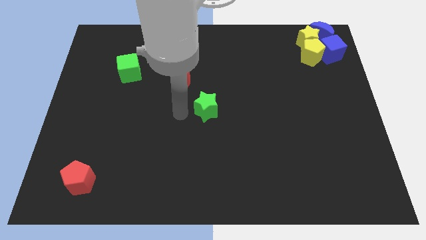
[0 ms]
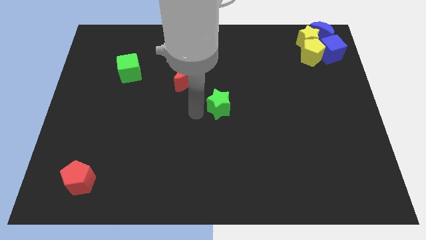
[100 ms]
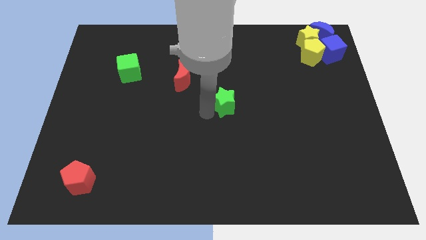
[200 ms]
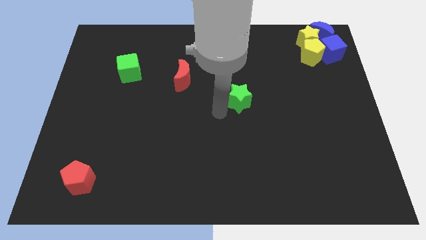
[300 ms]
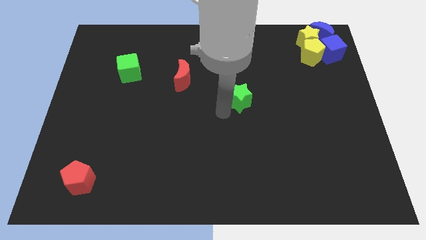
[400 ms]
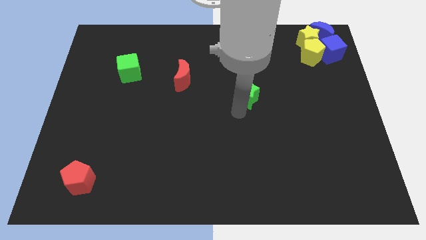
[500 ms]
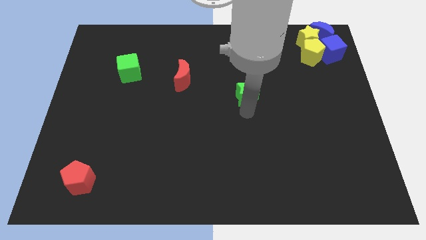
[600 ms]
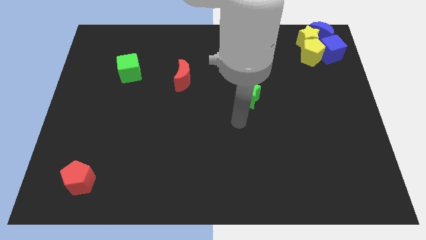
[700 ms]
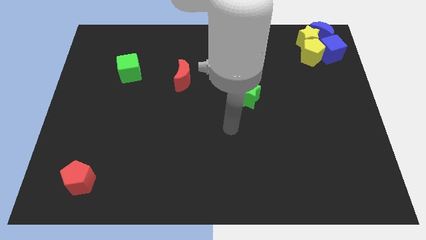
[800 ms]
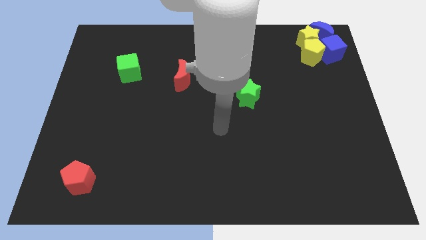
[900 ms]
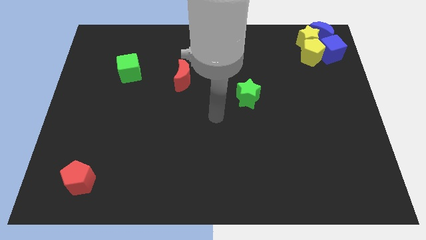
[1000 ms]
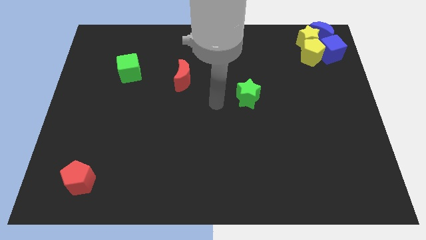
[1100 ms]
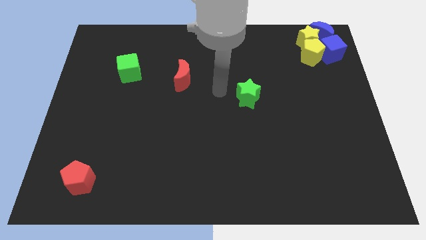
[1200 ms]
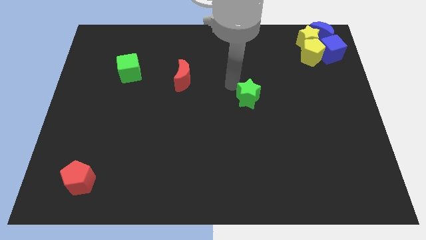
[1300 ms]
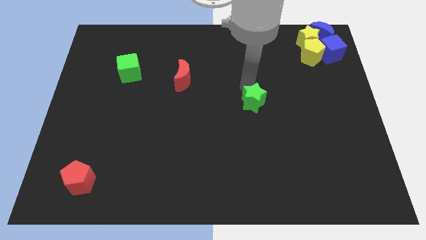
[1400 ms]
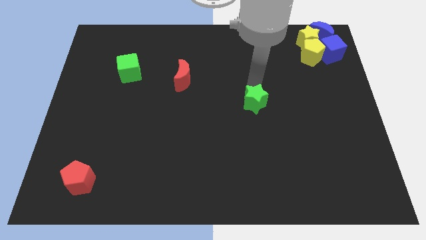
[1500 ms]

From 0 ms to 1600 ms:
move the green star towards right side

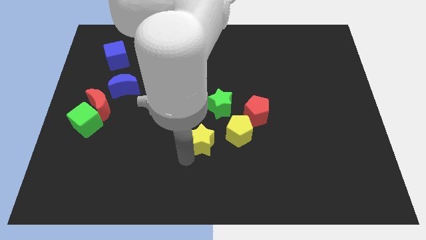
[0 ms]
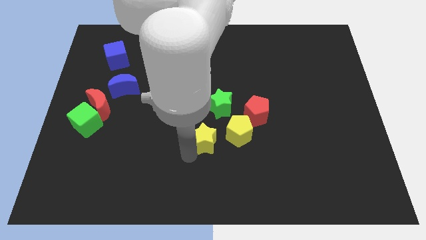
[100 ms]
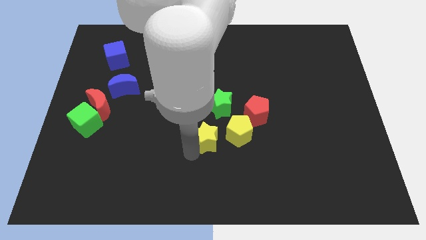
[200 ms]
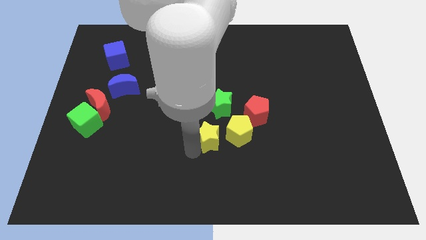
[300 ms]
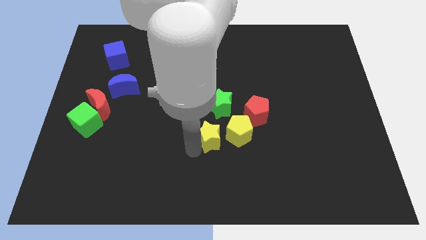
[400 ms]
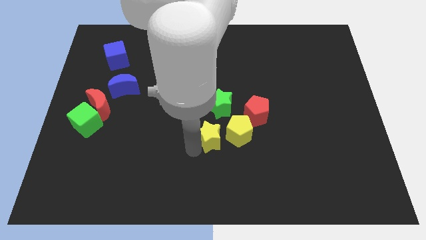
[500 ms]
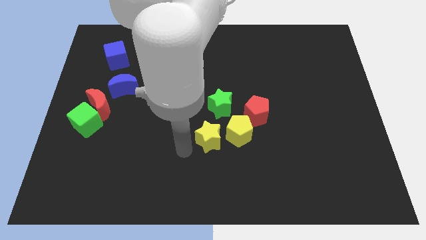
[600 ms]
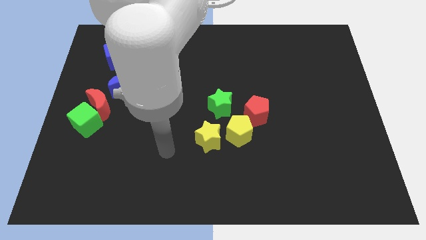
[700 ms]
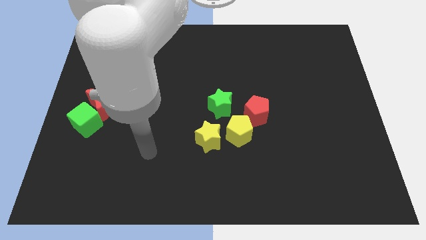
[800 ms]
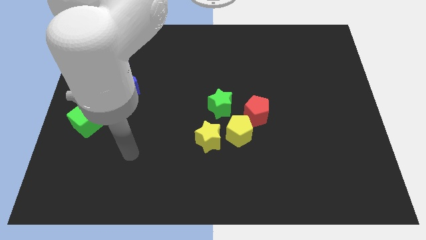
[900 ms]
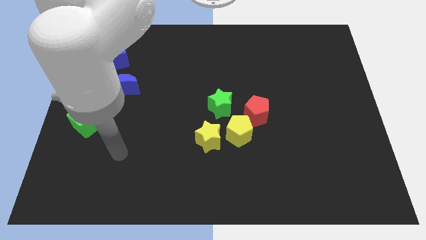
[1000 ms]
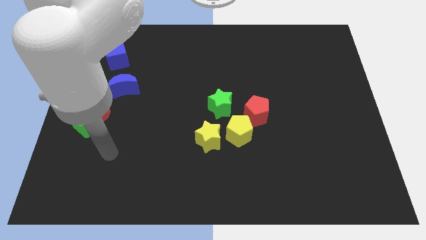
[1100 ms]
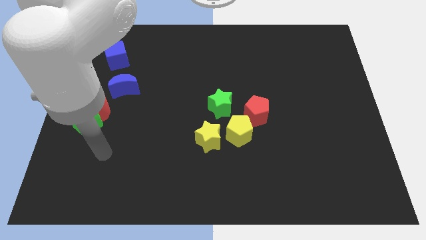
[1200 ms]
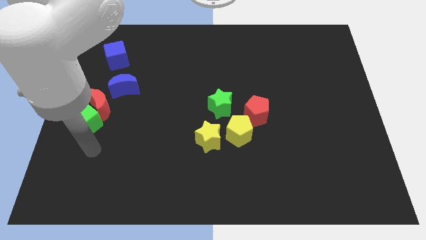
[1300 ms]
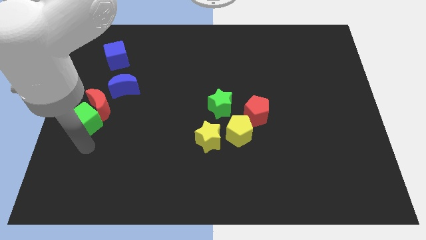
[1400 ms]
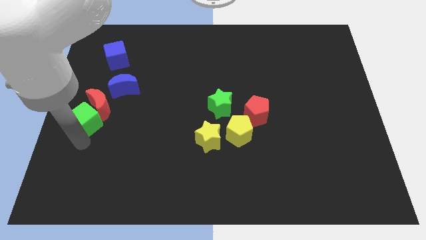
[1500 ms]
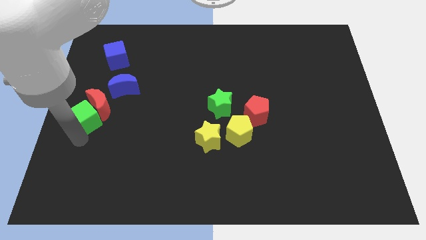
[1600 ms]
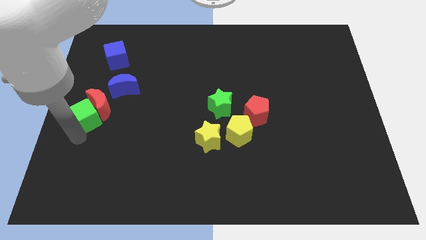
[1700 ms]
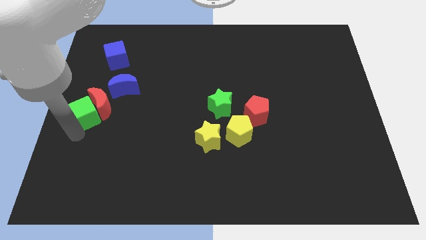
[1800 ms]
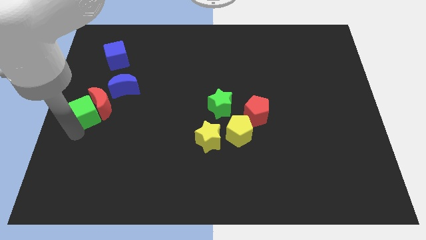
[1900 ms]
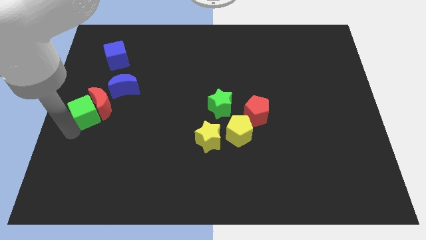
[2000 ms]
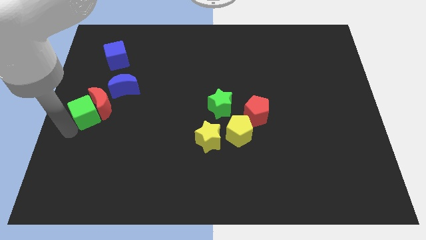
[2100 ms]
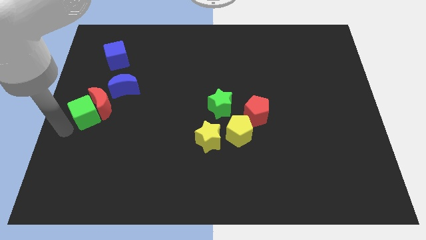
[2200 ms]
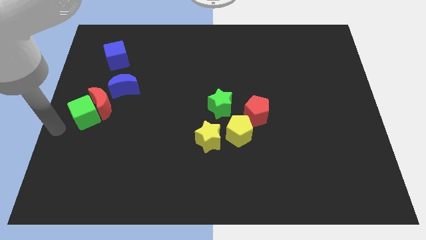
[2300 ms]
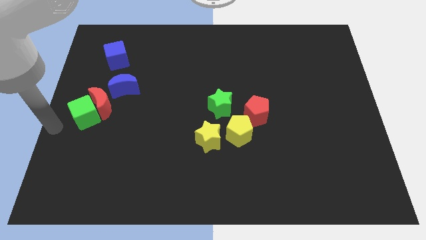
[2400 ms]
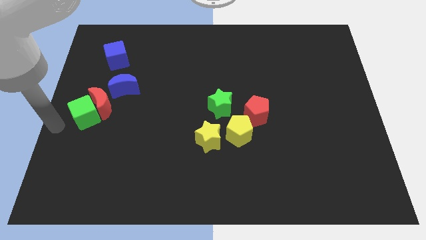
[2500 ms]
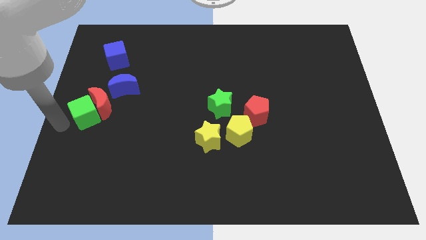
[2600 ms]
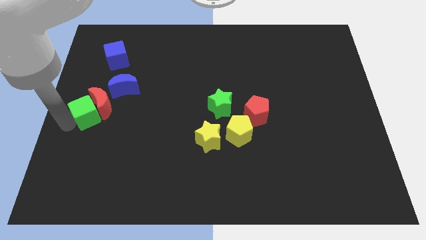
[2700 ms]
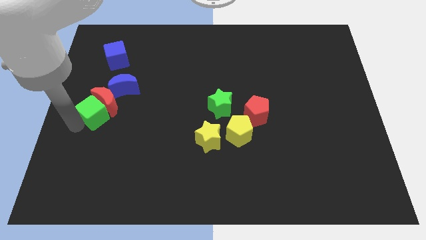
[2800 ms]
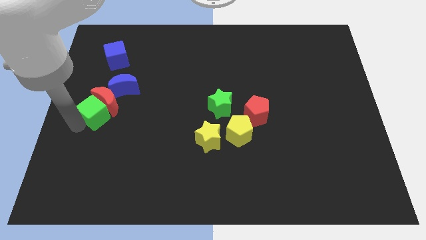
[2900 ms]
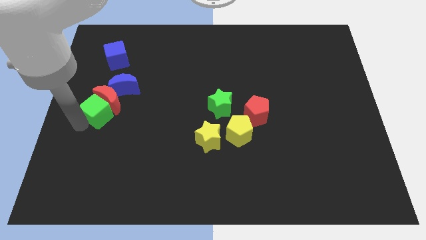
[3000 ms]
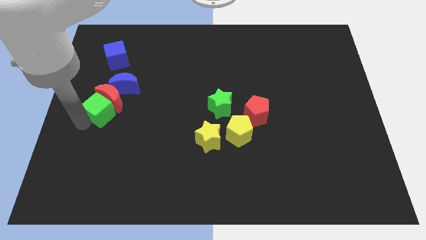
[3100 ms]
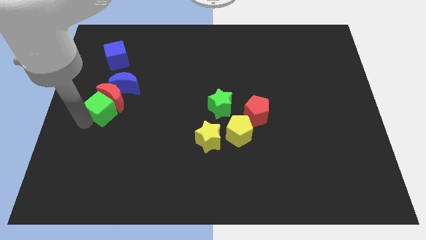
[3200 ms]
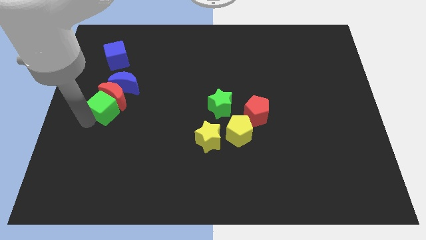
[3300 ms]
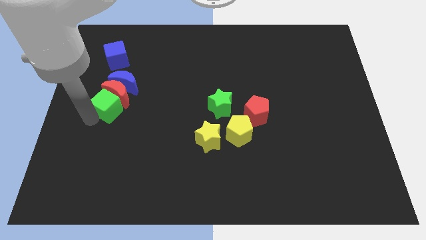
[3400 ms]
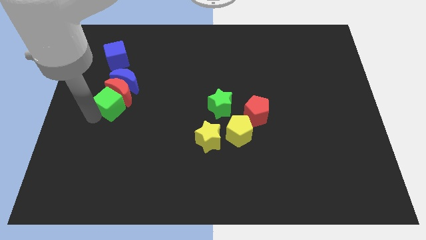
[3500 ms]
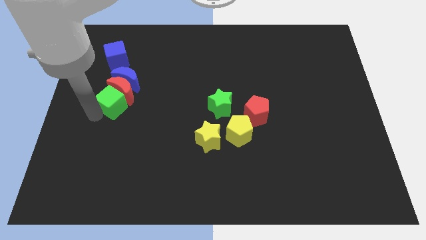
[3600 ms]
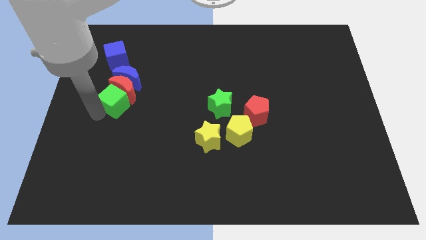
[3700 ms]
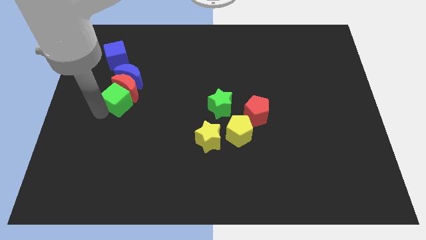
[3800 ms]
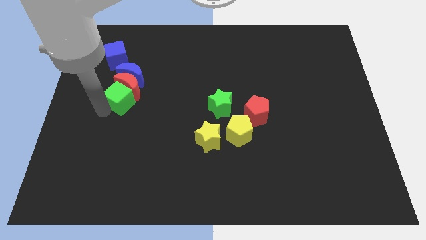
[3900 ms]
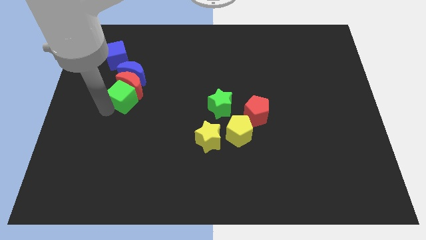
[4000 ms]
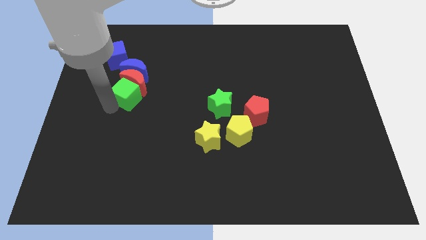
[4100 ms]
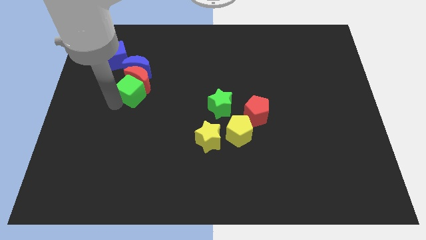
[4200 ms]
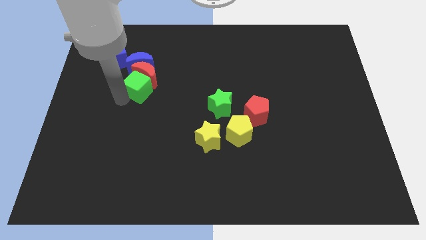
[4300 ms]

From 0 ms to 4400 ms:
move green cube and red moon towards top

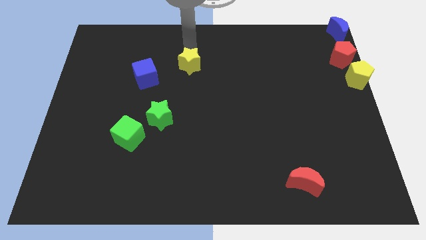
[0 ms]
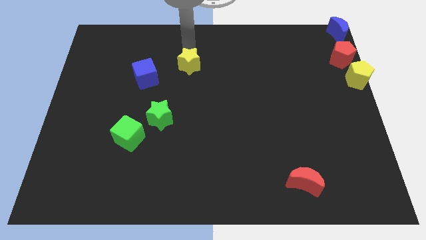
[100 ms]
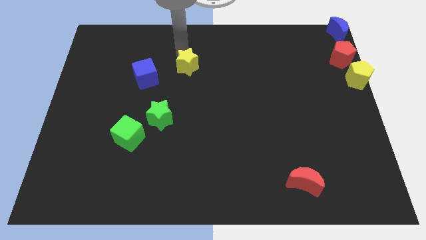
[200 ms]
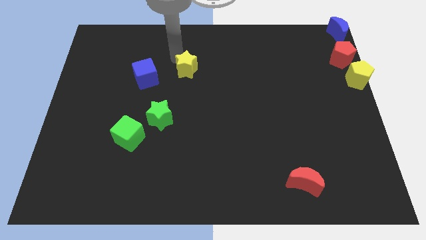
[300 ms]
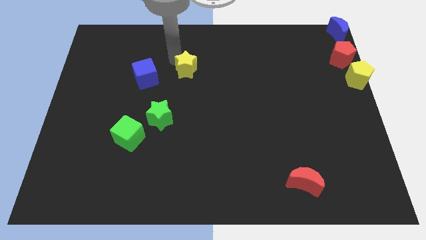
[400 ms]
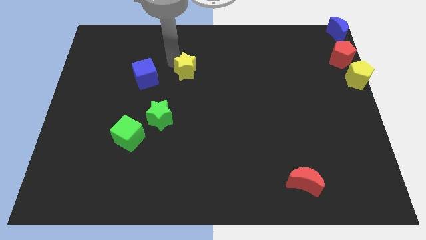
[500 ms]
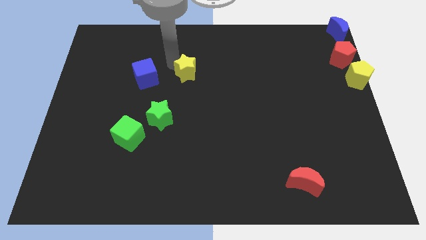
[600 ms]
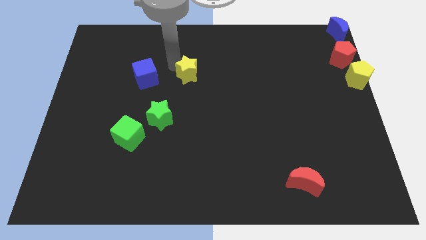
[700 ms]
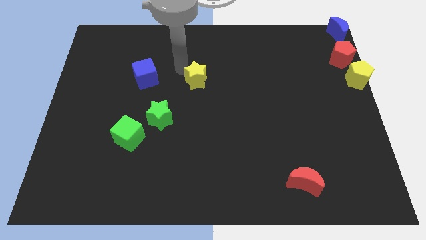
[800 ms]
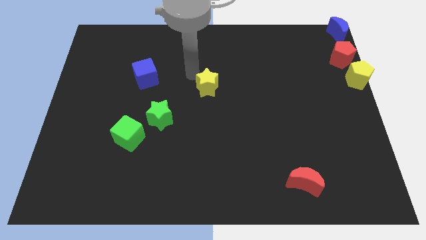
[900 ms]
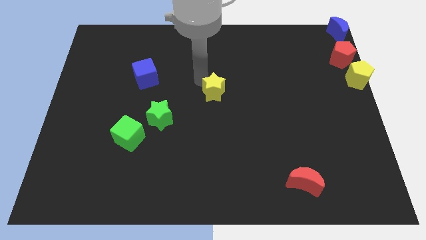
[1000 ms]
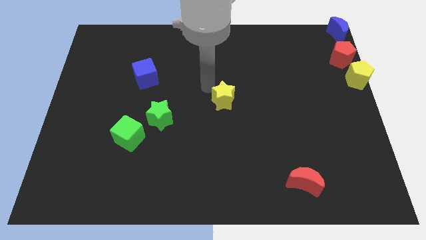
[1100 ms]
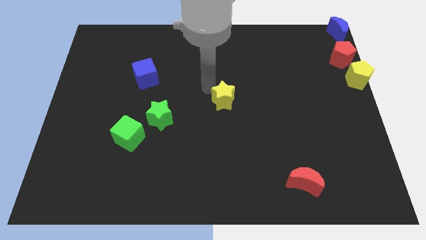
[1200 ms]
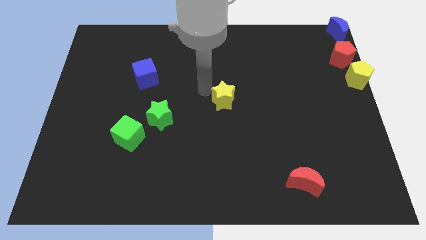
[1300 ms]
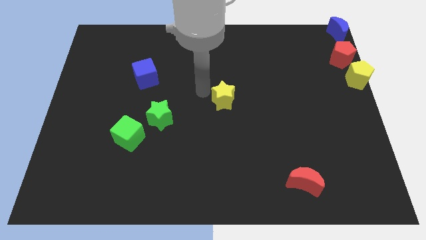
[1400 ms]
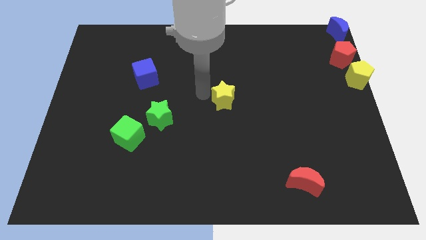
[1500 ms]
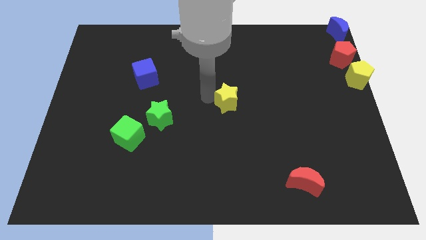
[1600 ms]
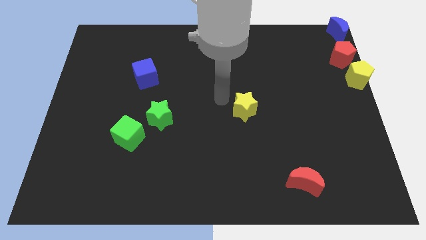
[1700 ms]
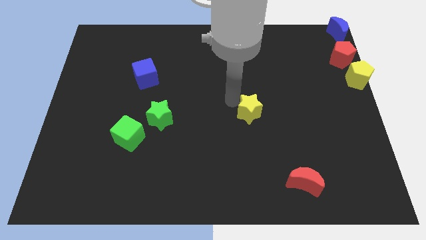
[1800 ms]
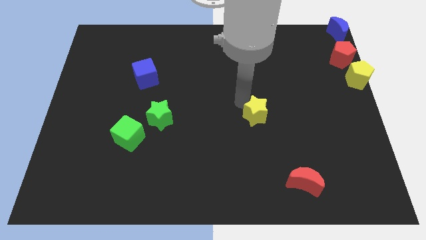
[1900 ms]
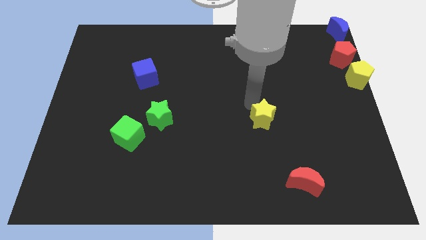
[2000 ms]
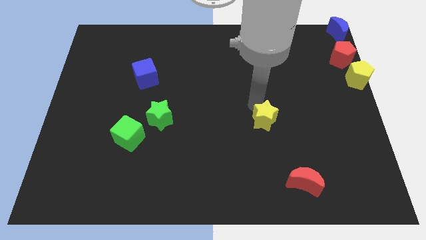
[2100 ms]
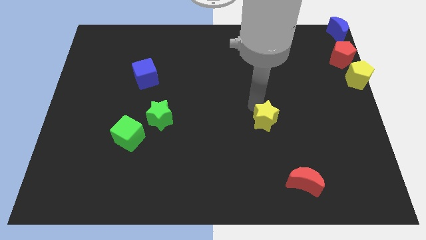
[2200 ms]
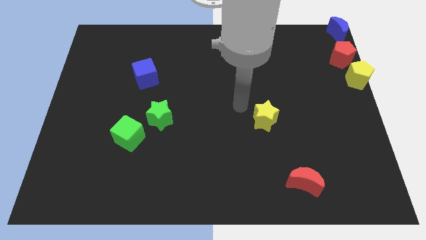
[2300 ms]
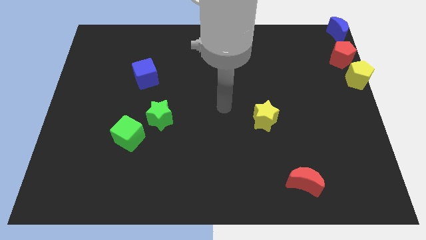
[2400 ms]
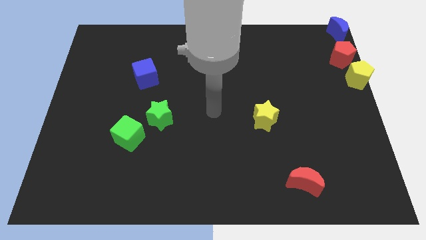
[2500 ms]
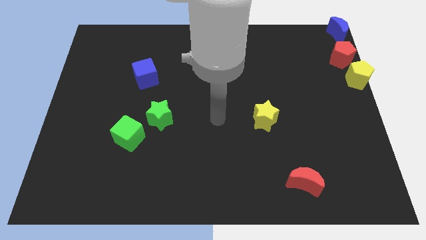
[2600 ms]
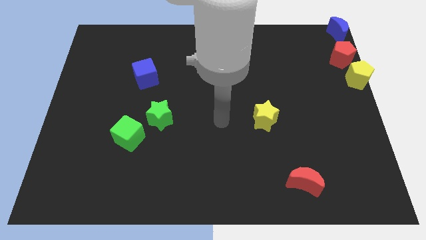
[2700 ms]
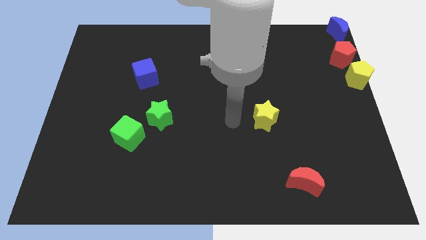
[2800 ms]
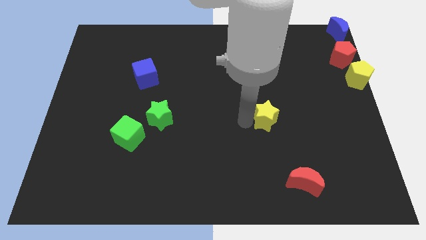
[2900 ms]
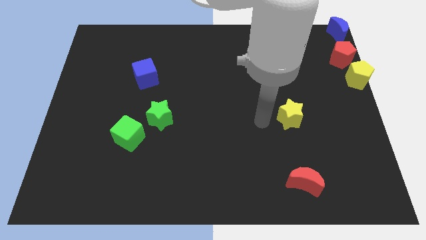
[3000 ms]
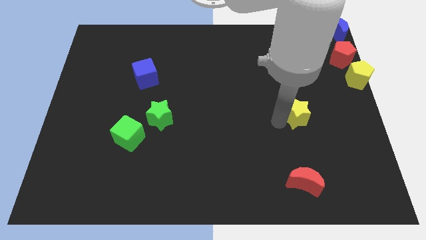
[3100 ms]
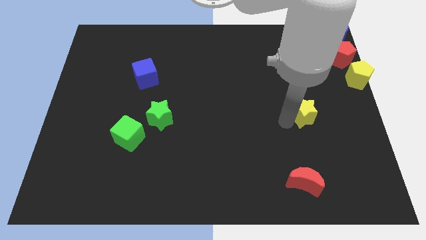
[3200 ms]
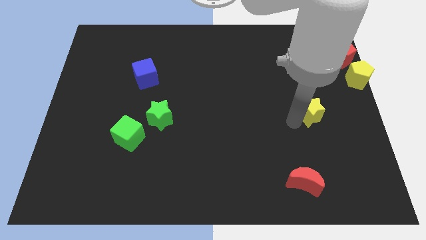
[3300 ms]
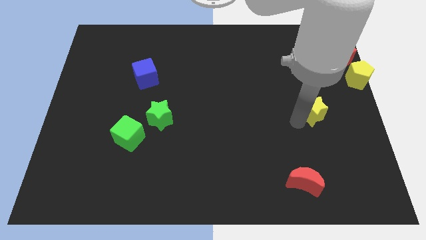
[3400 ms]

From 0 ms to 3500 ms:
move the yellow star horizontal right to green star
